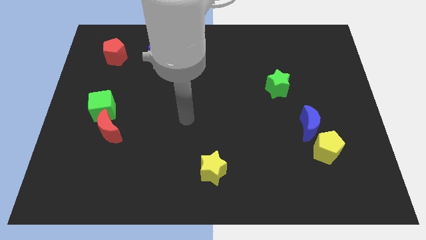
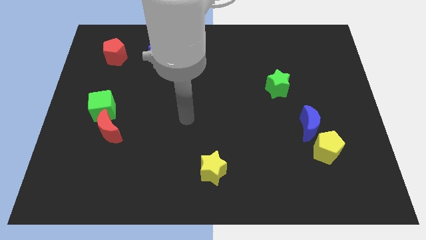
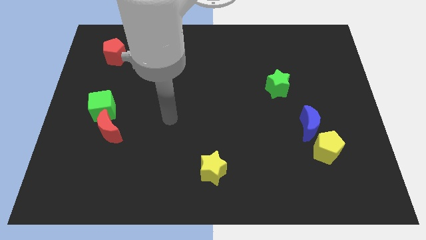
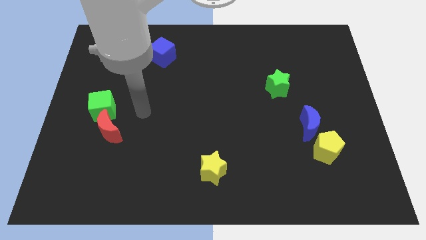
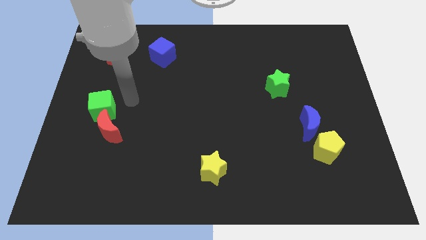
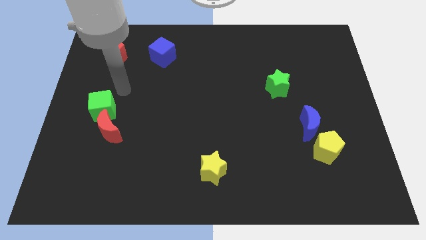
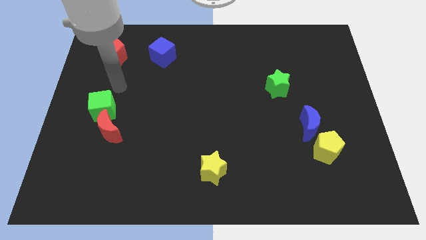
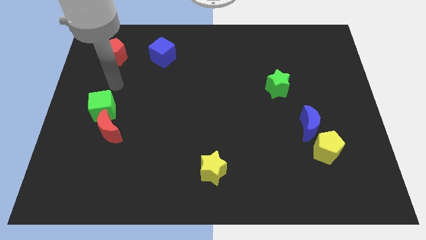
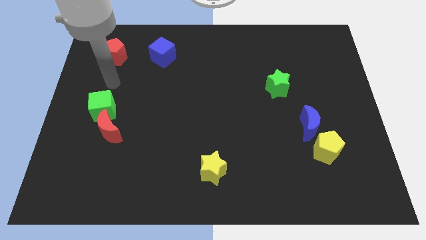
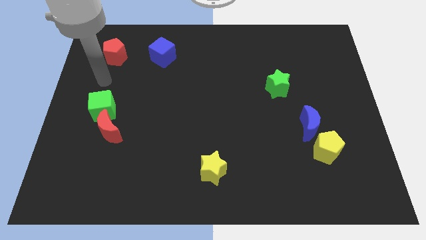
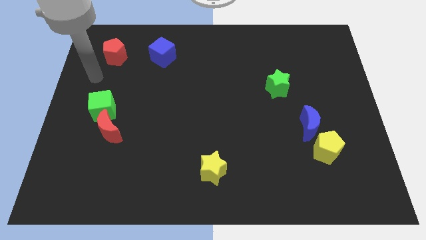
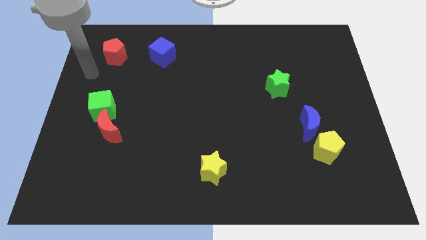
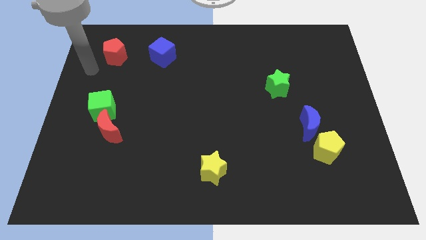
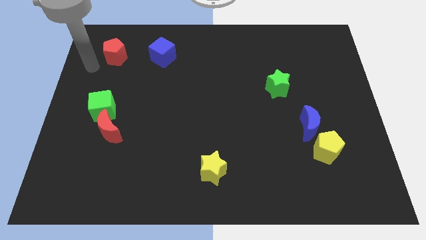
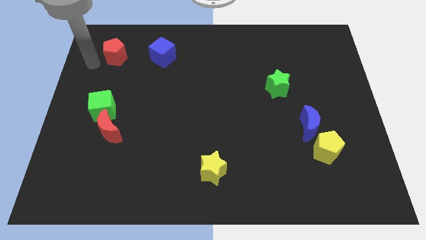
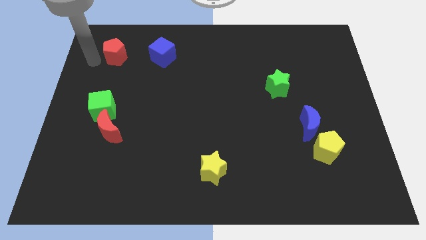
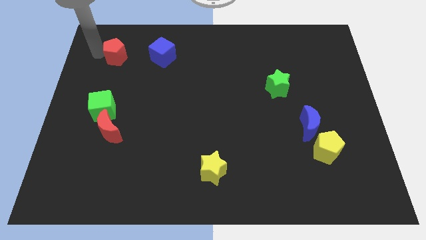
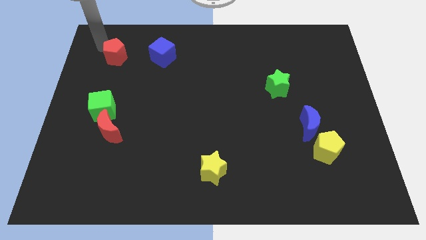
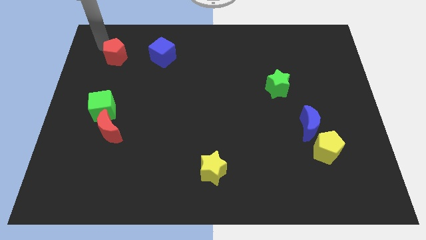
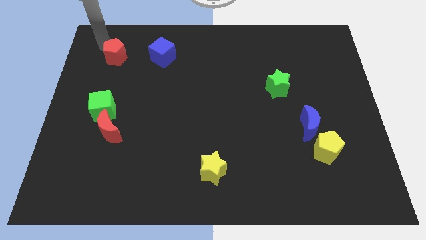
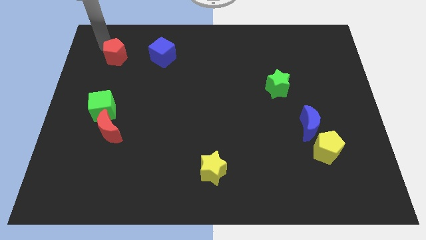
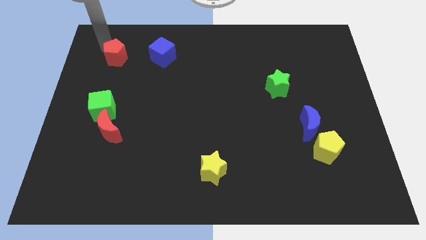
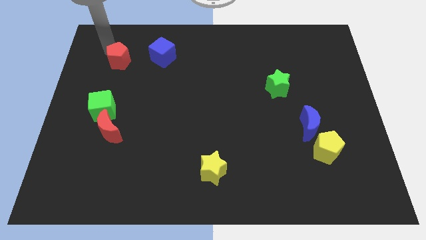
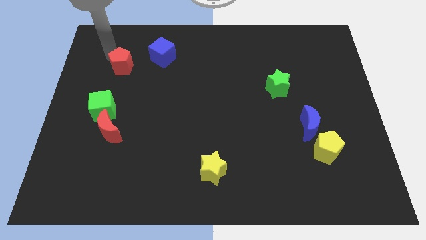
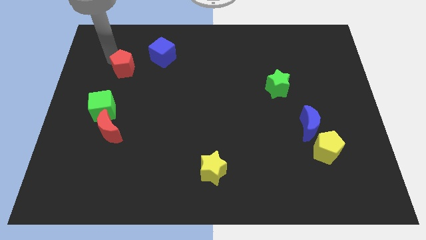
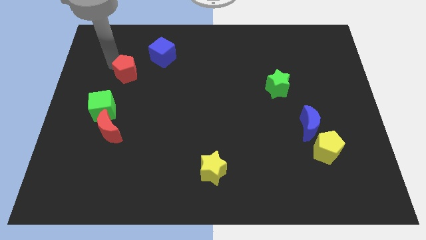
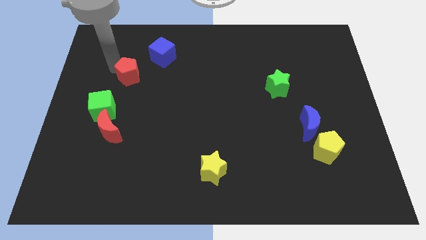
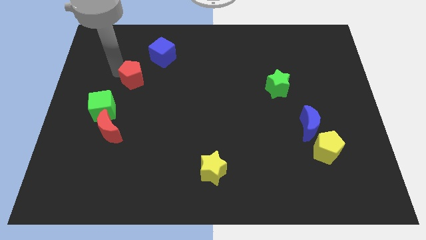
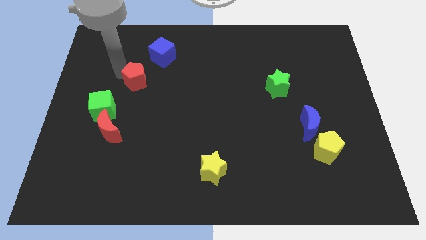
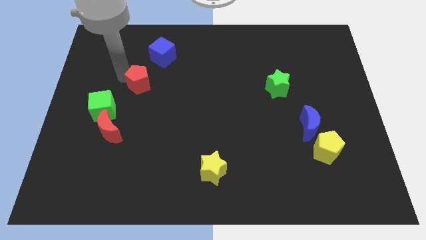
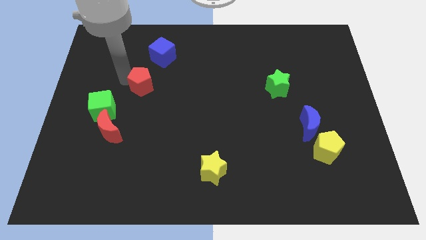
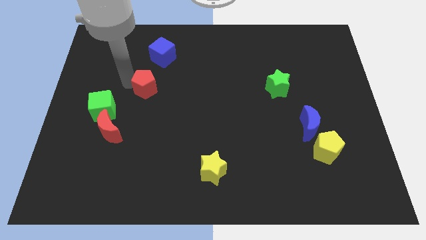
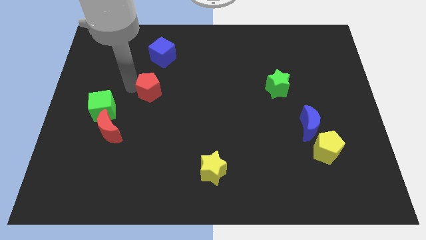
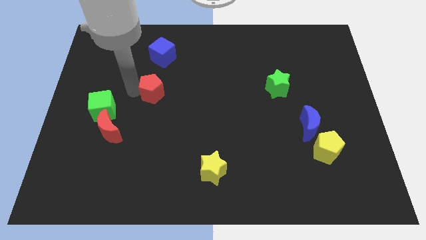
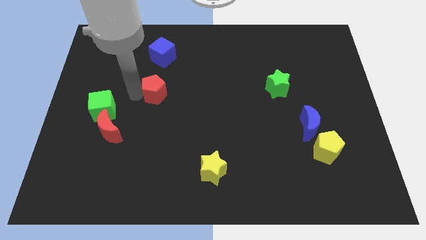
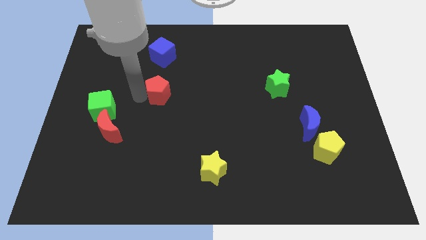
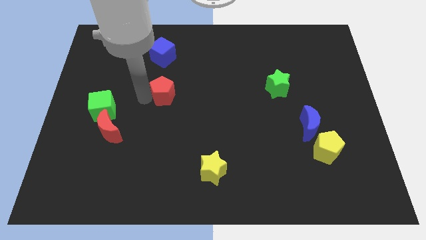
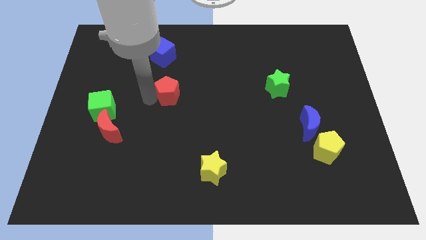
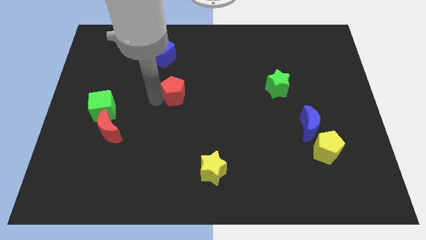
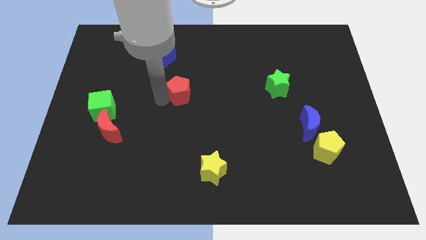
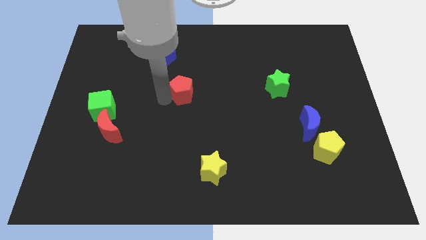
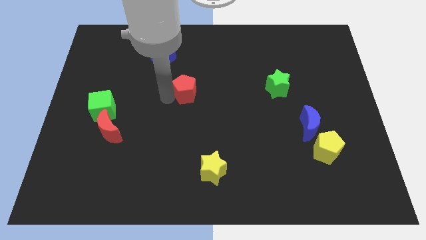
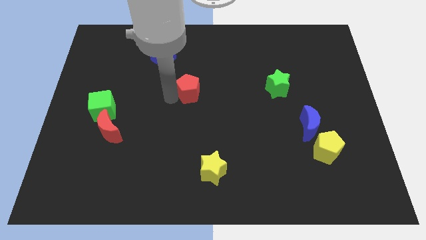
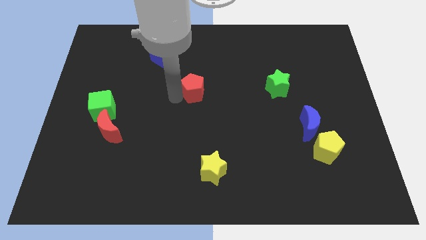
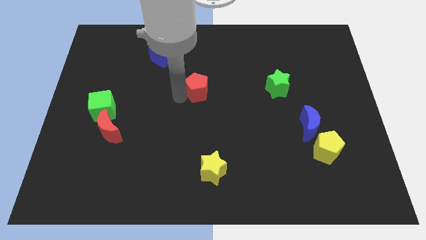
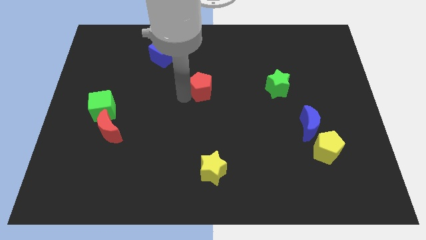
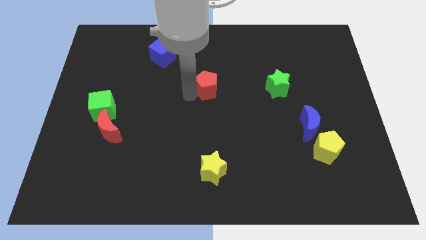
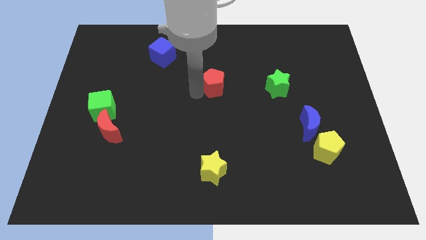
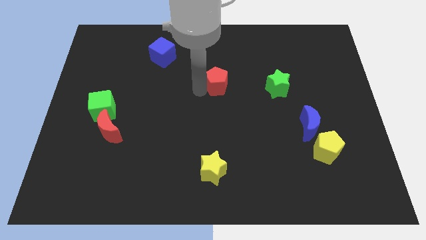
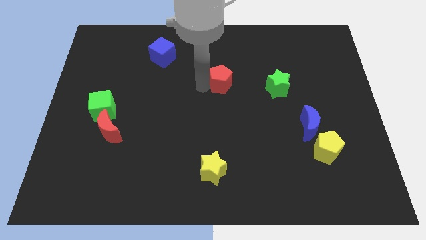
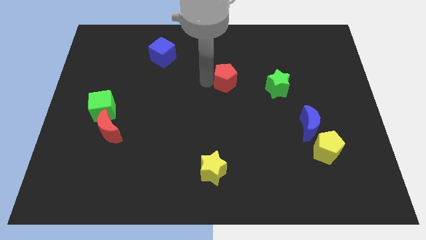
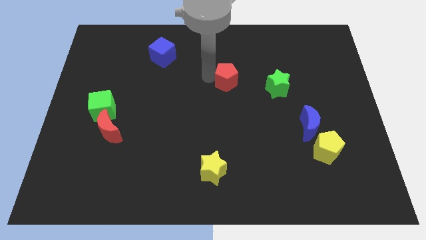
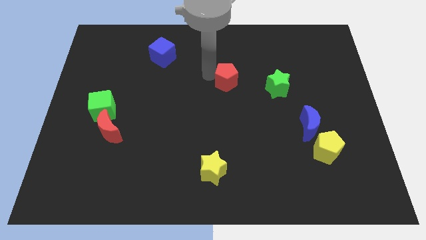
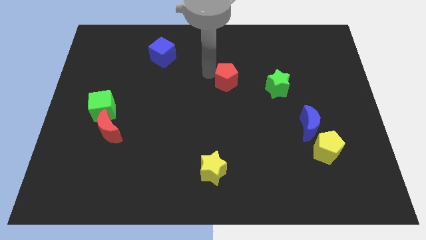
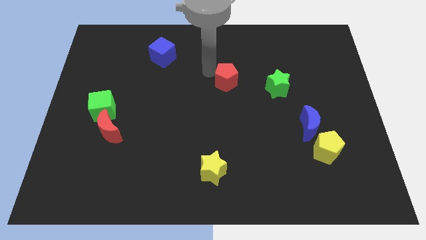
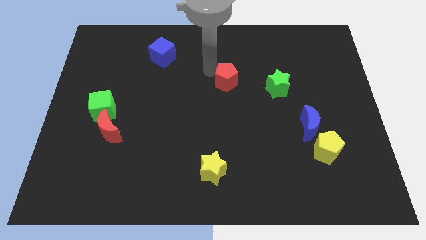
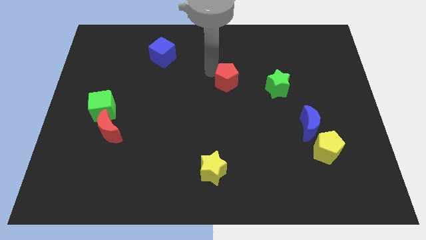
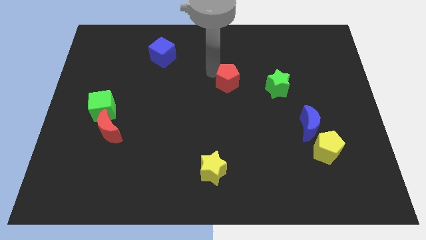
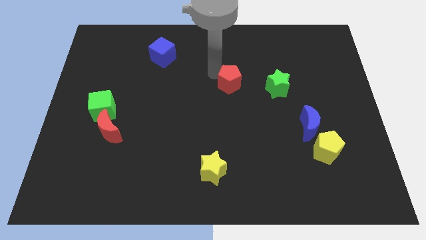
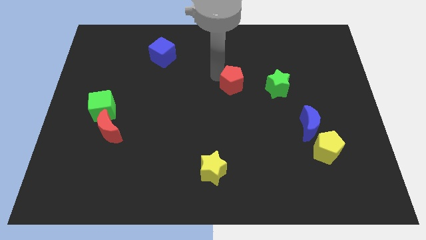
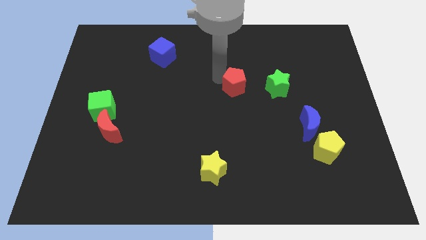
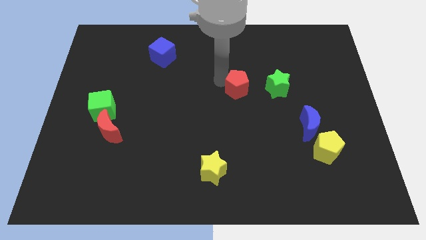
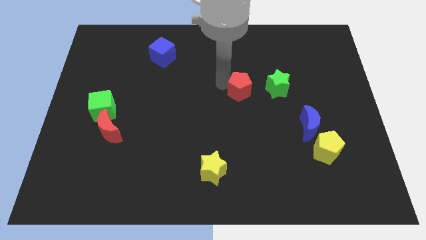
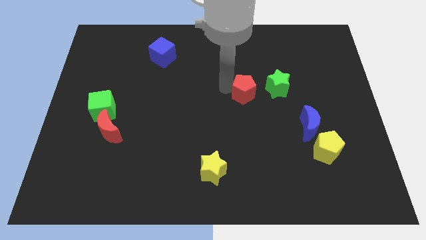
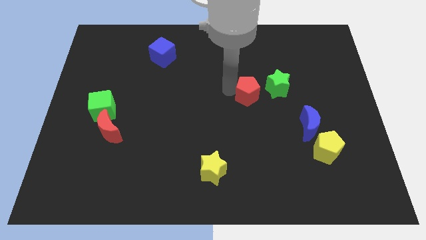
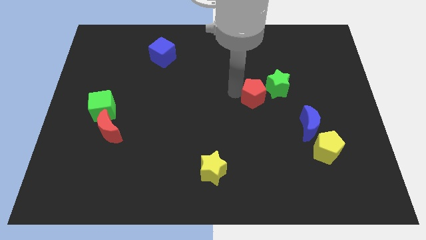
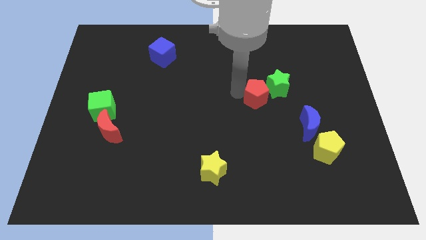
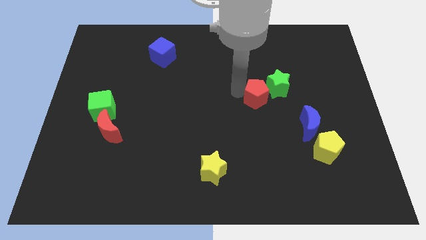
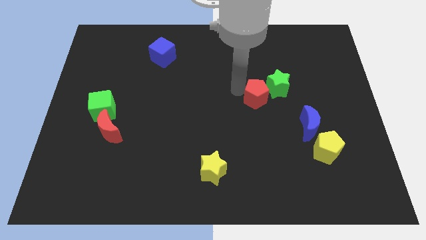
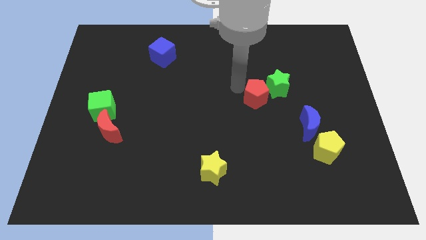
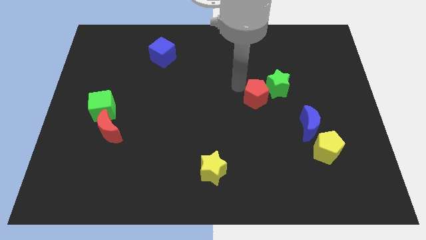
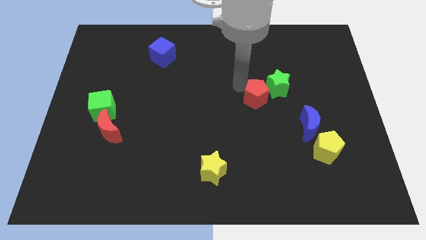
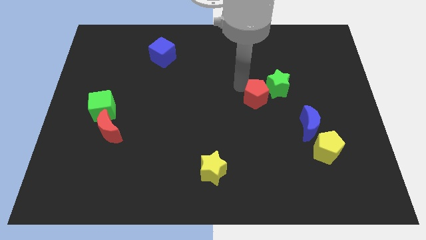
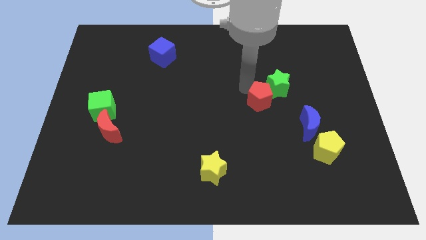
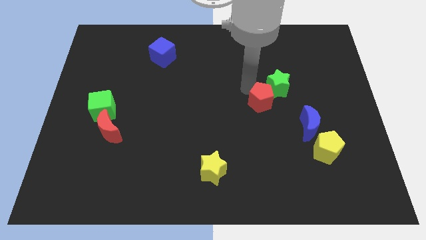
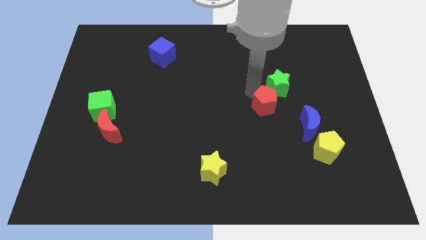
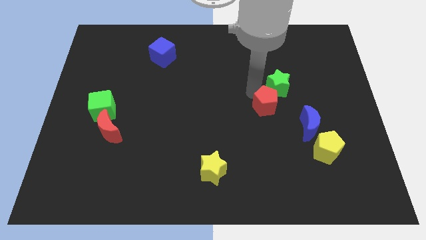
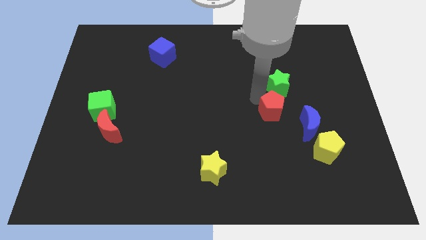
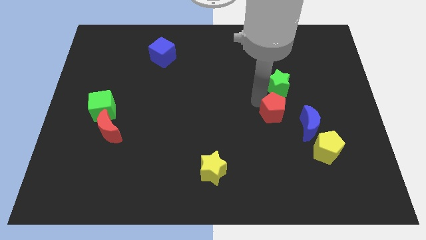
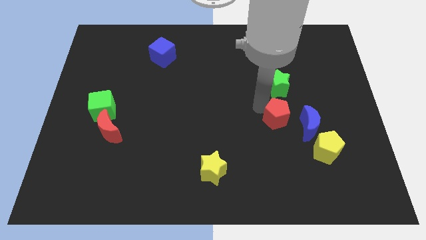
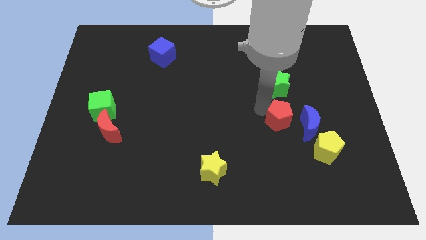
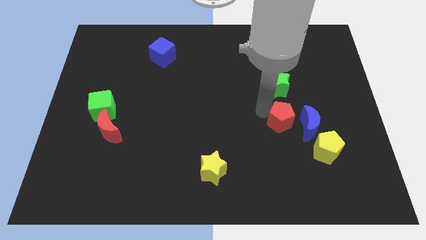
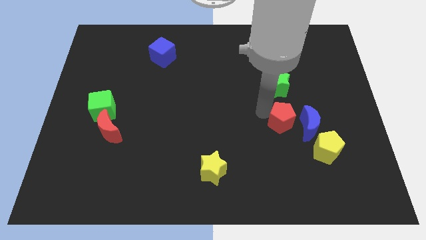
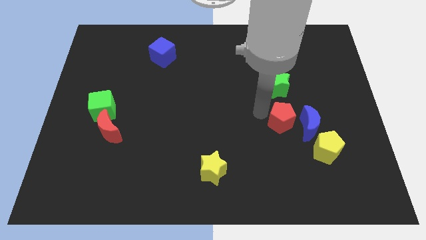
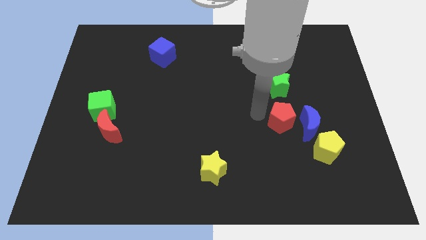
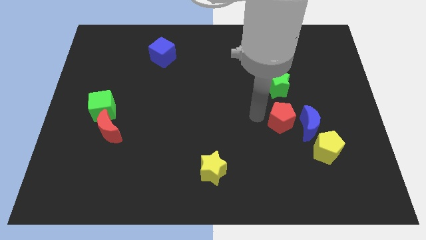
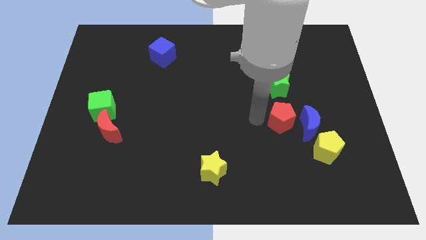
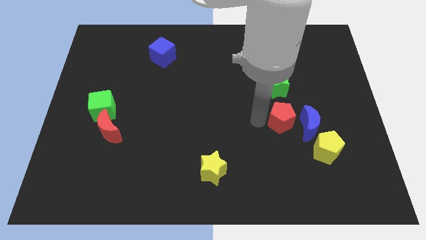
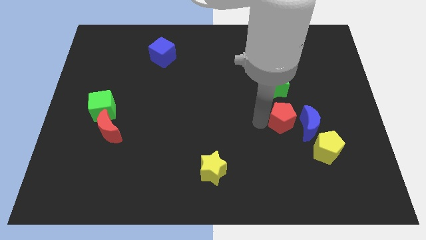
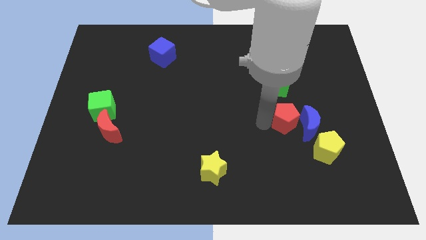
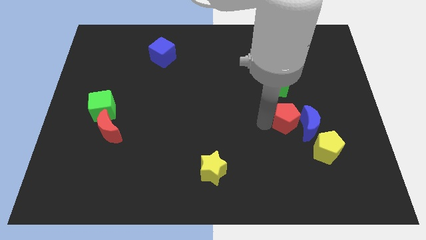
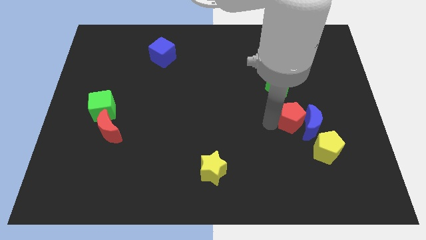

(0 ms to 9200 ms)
push the red pentagon to the blue moon
